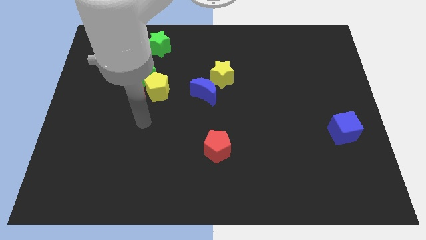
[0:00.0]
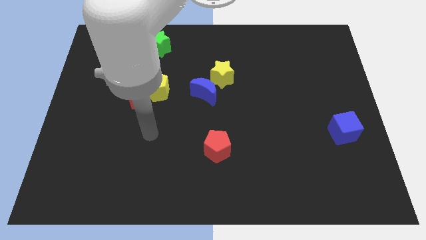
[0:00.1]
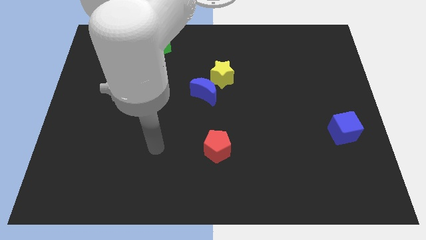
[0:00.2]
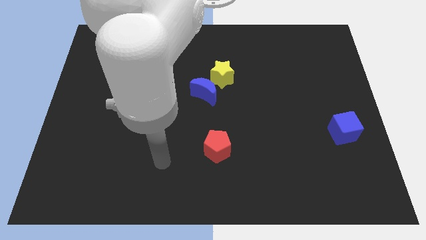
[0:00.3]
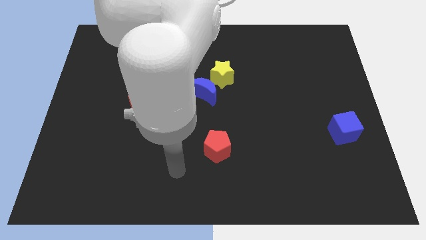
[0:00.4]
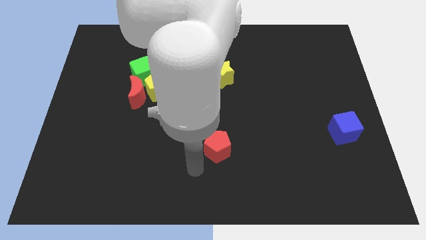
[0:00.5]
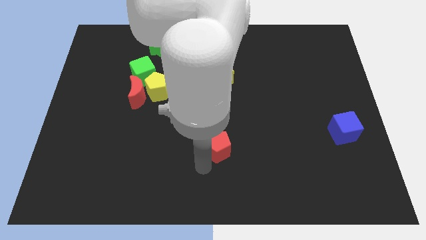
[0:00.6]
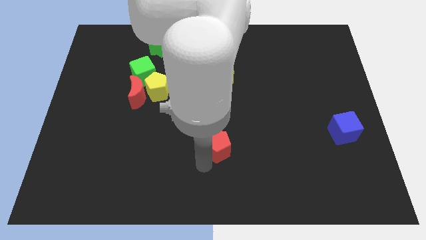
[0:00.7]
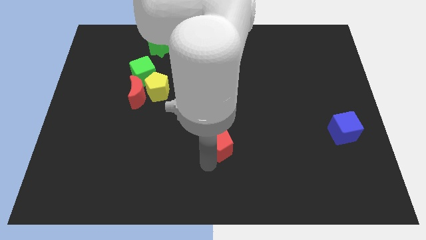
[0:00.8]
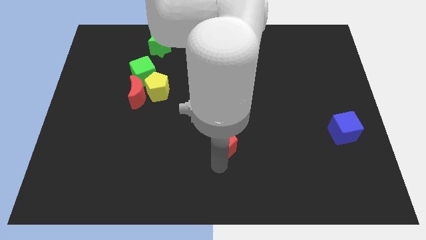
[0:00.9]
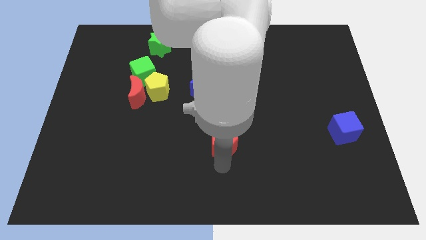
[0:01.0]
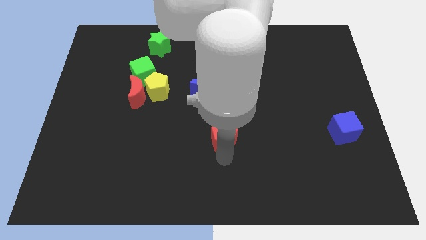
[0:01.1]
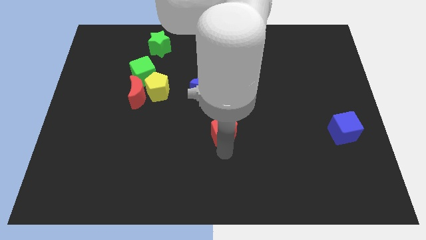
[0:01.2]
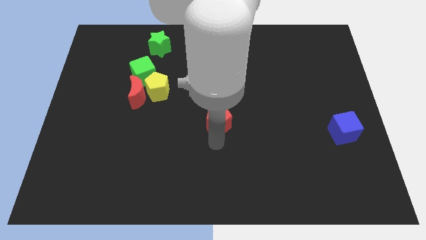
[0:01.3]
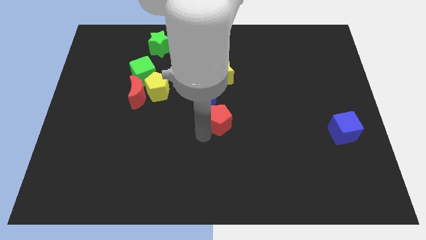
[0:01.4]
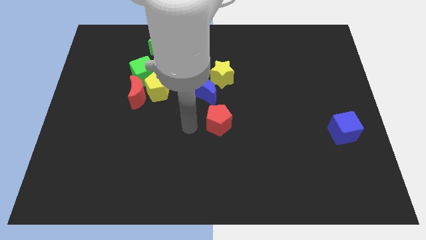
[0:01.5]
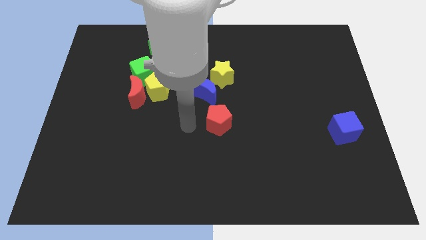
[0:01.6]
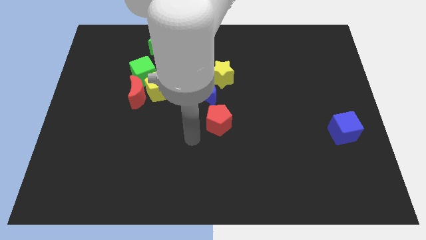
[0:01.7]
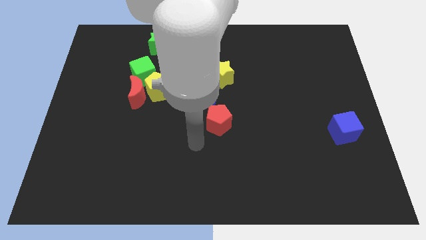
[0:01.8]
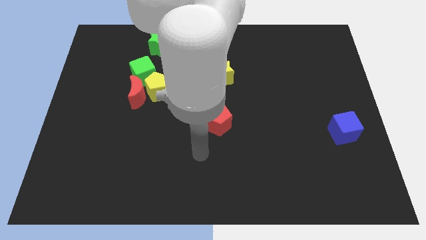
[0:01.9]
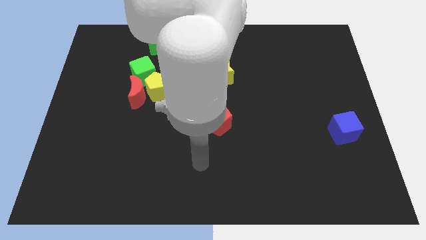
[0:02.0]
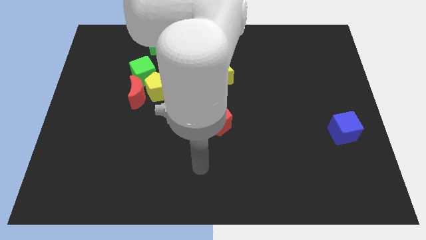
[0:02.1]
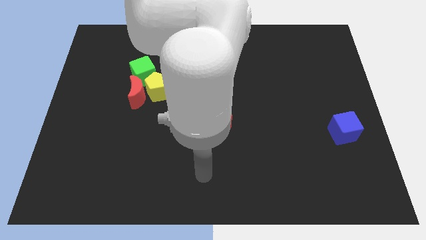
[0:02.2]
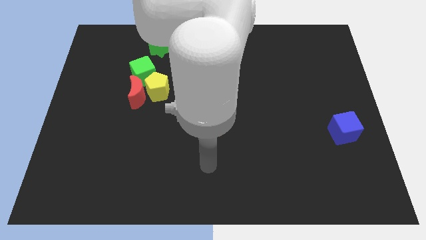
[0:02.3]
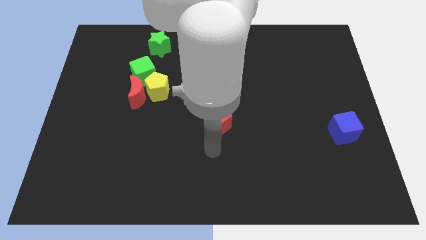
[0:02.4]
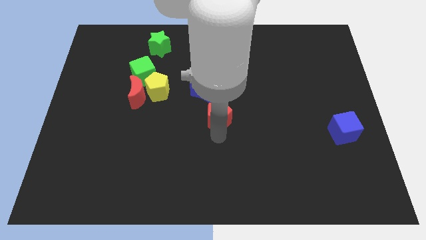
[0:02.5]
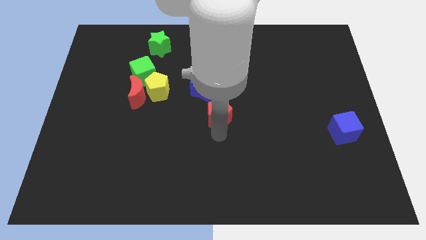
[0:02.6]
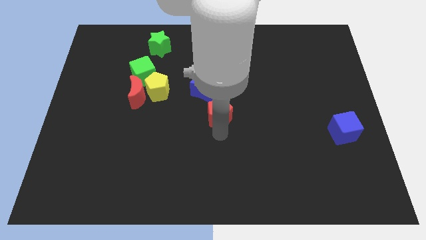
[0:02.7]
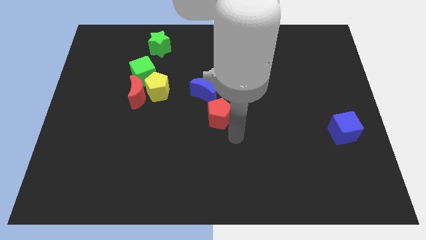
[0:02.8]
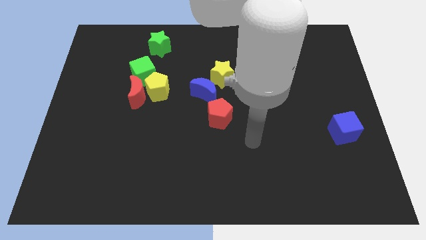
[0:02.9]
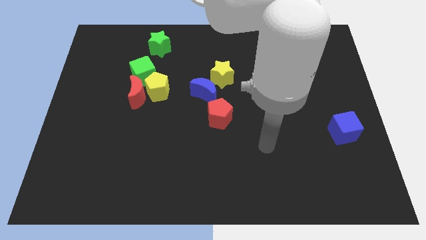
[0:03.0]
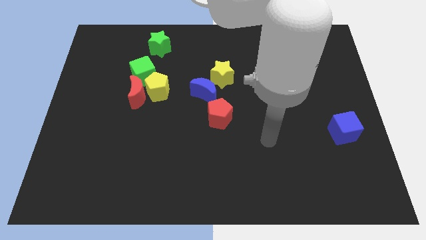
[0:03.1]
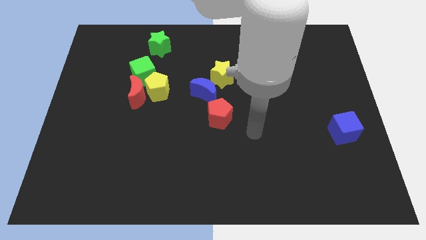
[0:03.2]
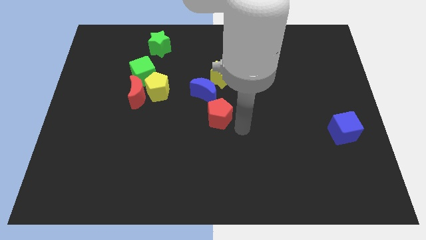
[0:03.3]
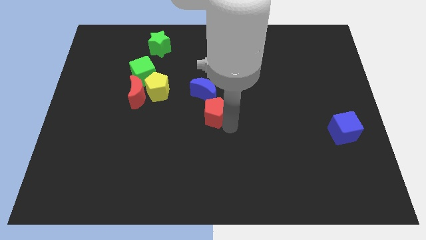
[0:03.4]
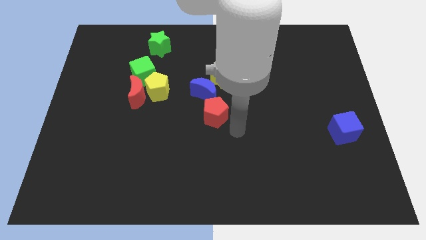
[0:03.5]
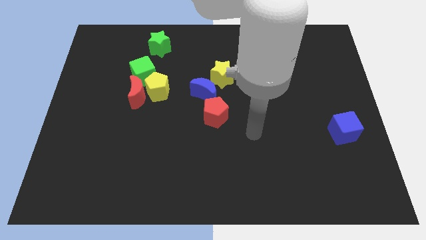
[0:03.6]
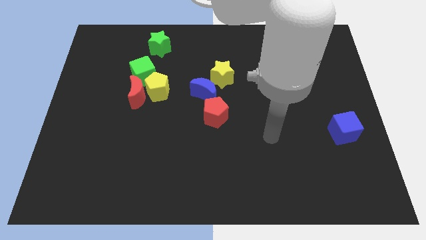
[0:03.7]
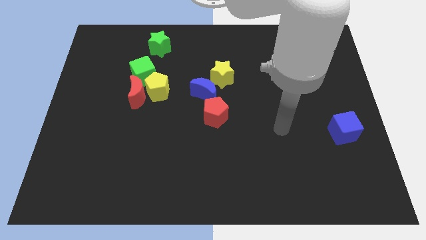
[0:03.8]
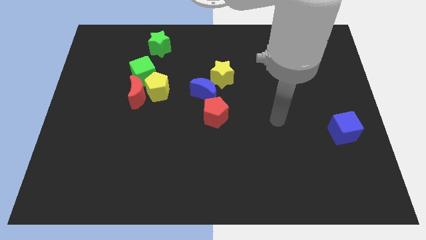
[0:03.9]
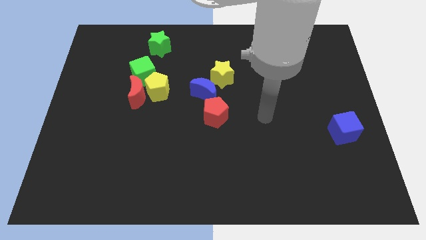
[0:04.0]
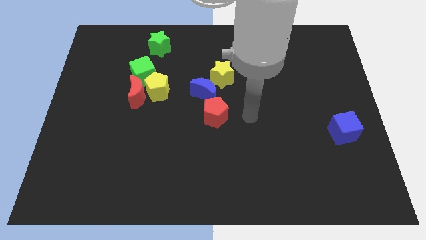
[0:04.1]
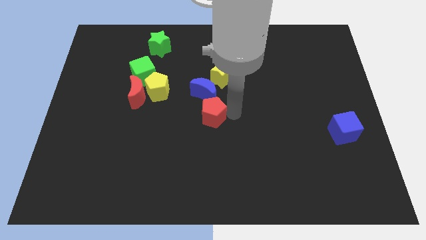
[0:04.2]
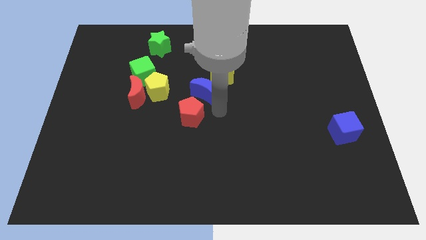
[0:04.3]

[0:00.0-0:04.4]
place the red pentagon below the blue moon

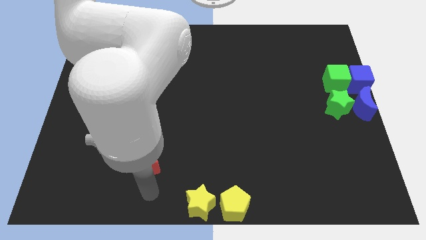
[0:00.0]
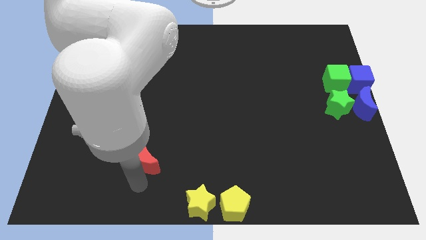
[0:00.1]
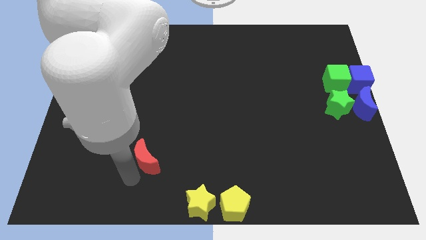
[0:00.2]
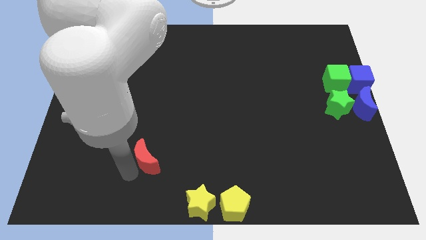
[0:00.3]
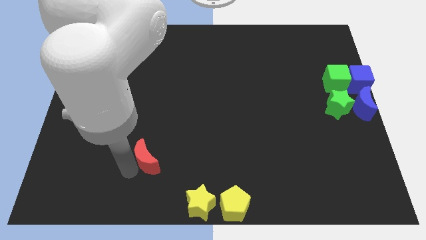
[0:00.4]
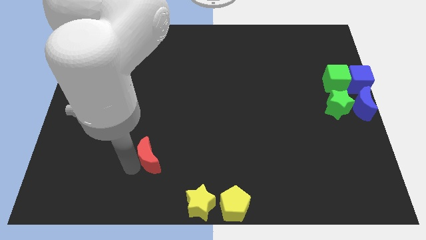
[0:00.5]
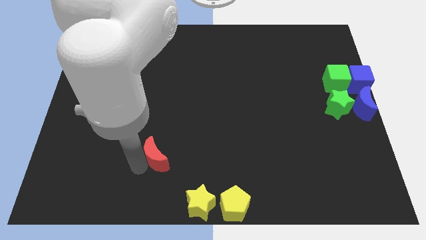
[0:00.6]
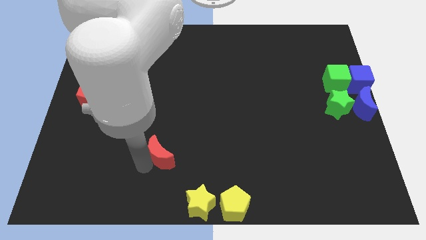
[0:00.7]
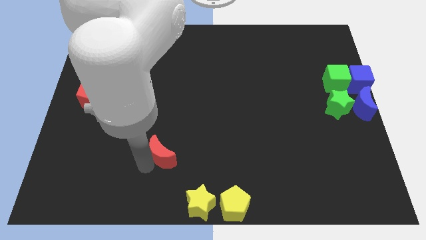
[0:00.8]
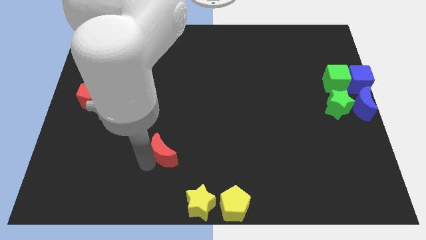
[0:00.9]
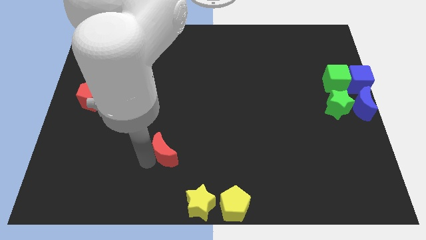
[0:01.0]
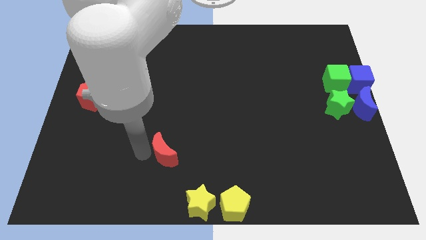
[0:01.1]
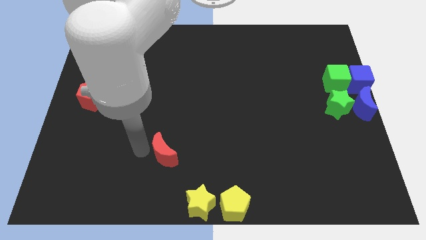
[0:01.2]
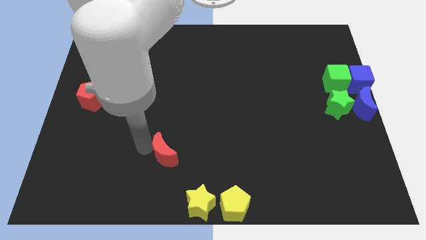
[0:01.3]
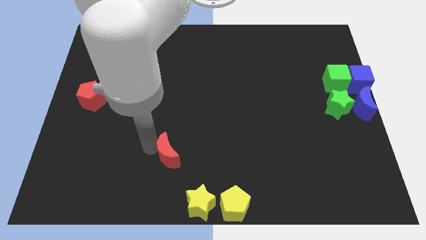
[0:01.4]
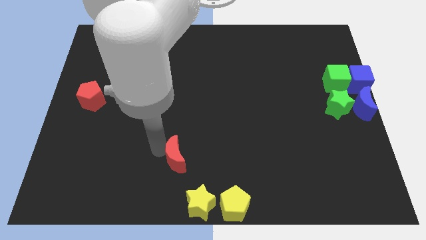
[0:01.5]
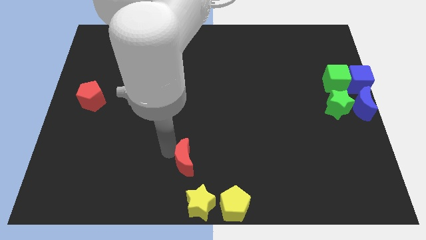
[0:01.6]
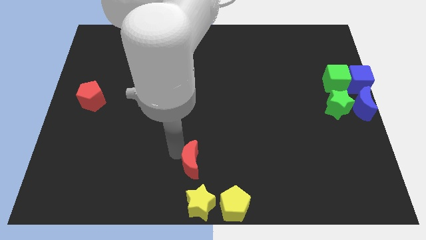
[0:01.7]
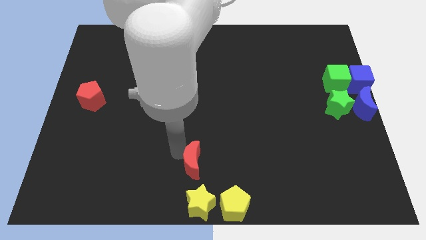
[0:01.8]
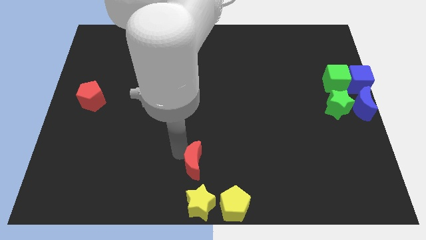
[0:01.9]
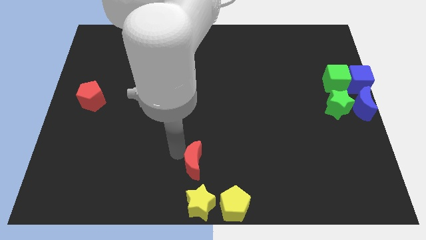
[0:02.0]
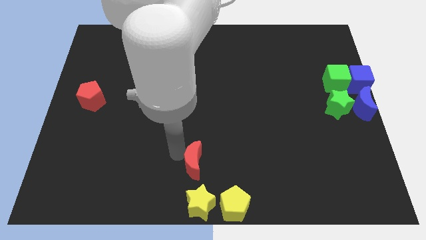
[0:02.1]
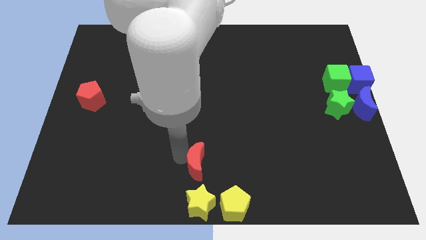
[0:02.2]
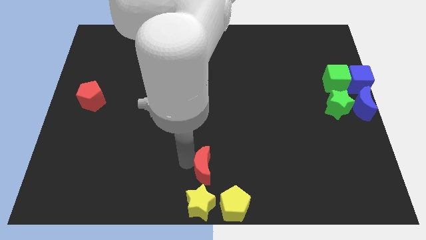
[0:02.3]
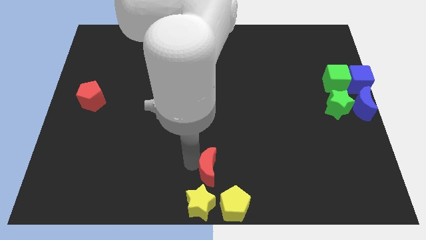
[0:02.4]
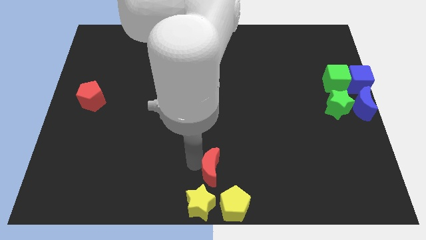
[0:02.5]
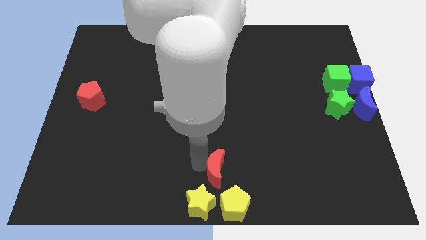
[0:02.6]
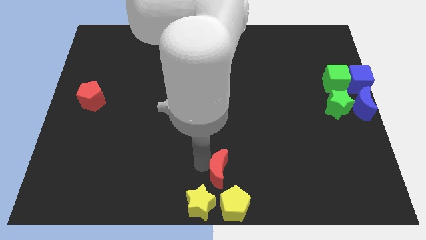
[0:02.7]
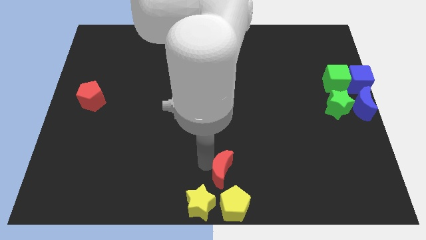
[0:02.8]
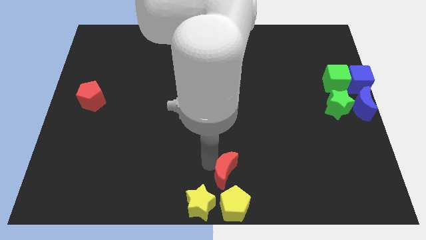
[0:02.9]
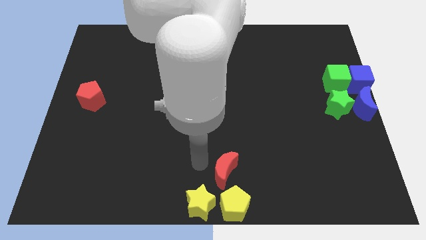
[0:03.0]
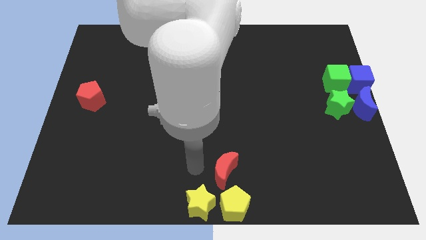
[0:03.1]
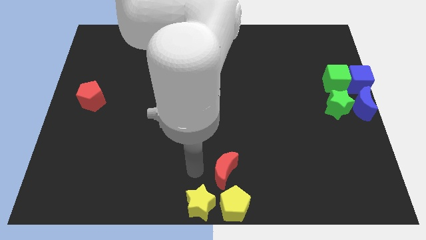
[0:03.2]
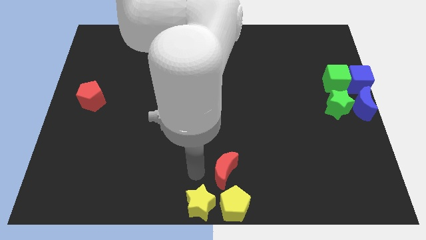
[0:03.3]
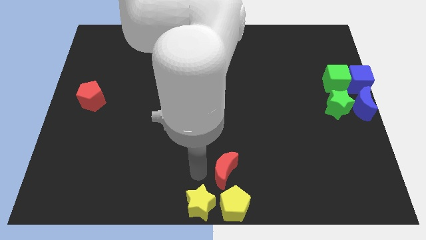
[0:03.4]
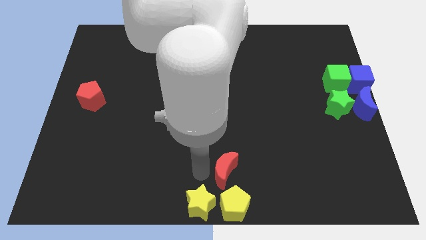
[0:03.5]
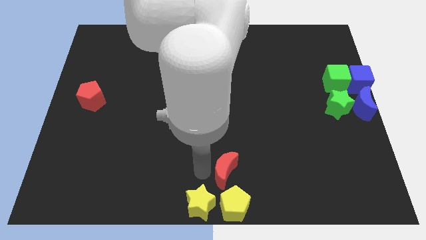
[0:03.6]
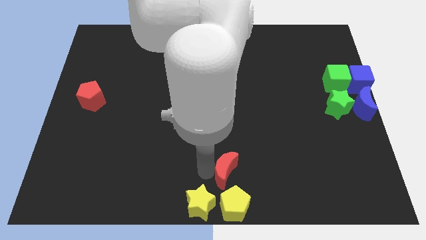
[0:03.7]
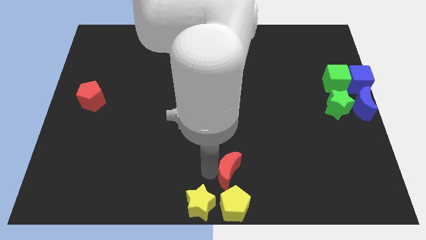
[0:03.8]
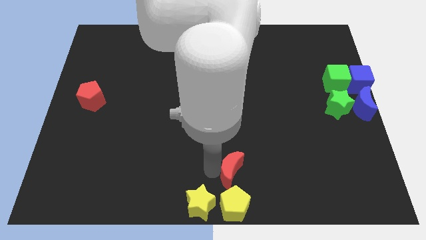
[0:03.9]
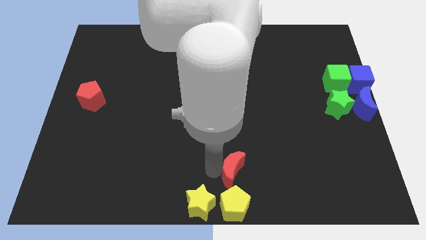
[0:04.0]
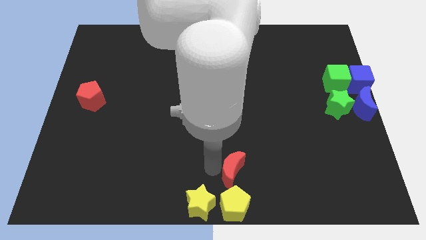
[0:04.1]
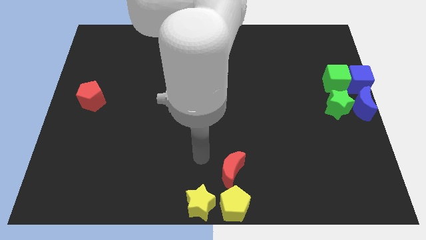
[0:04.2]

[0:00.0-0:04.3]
push the red crescent vertically above the yellow pentagon

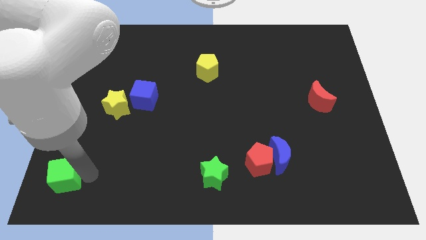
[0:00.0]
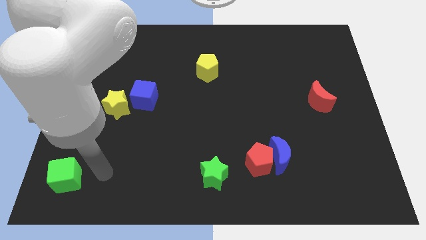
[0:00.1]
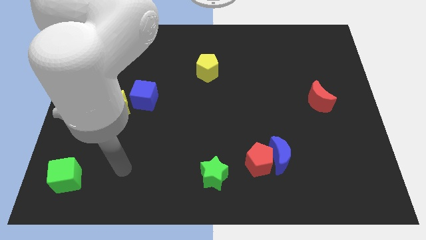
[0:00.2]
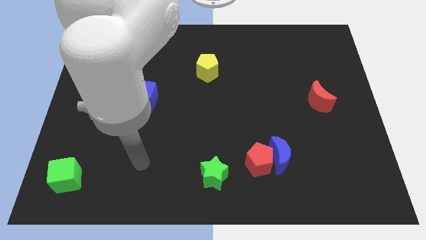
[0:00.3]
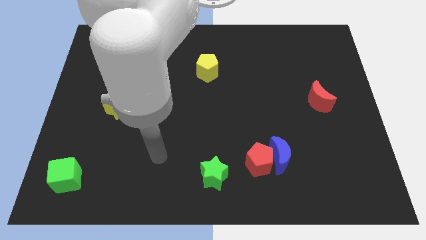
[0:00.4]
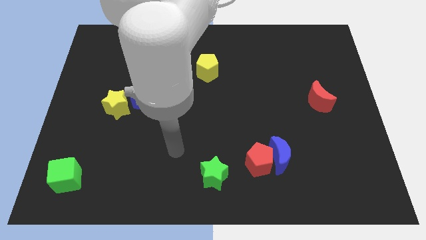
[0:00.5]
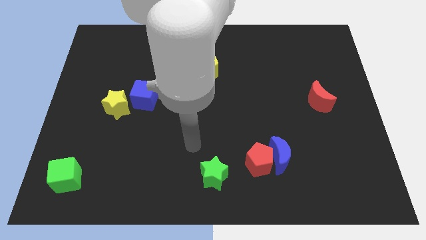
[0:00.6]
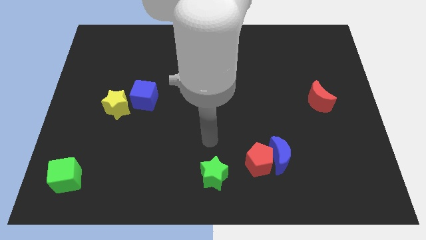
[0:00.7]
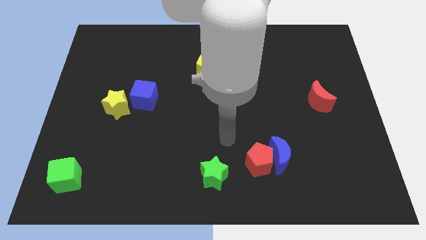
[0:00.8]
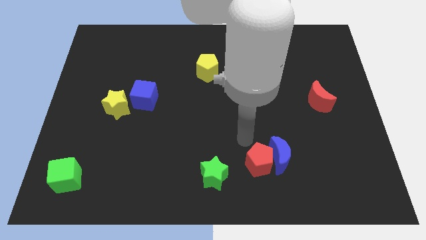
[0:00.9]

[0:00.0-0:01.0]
place your arm towards the top of green star
